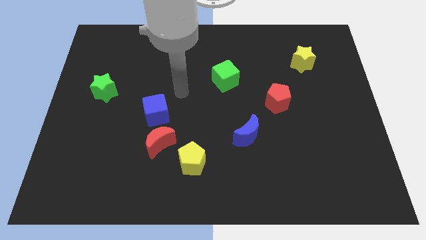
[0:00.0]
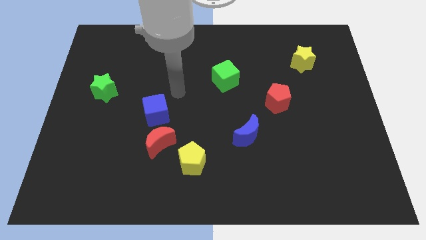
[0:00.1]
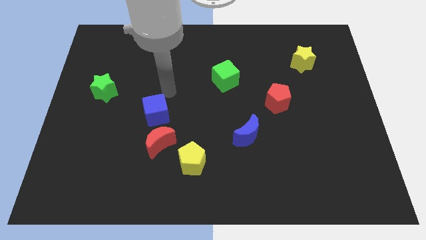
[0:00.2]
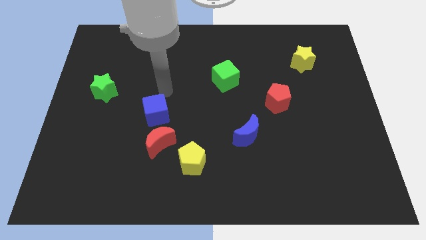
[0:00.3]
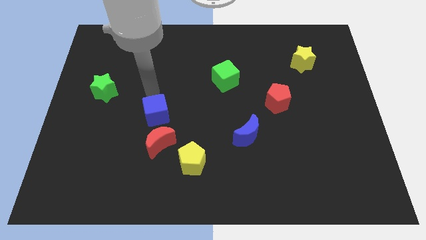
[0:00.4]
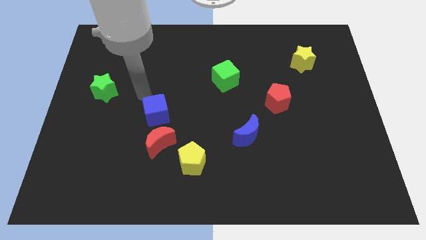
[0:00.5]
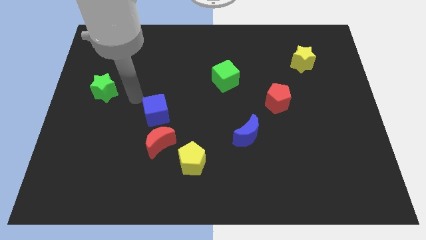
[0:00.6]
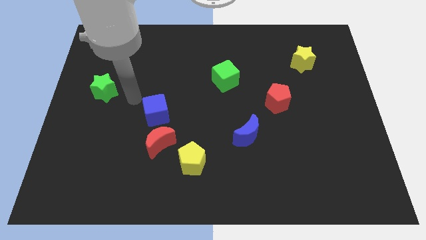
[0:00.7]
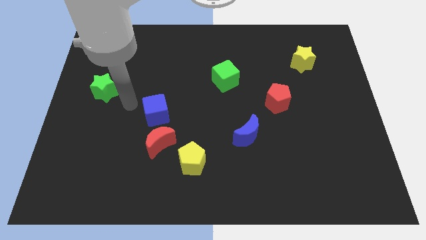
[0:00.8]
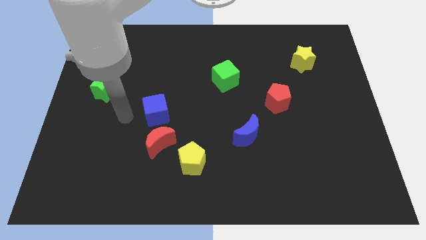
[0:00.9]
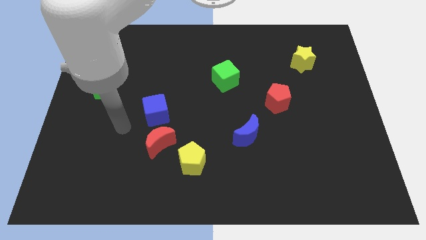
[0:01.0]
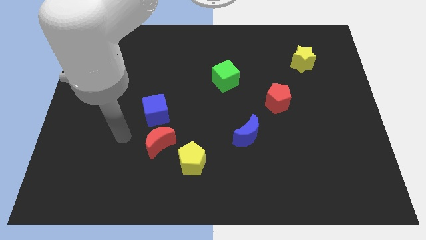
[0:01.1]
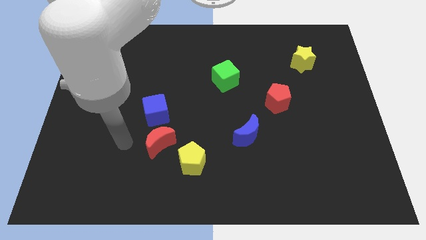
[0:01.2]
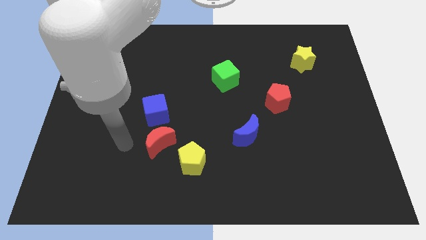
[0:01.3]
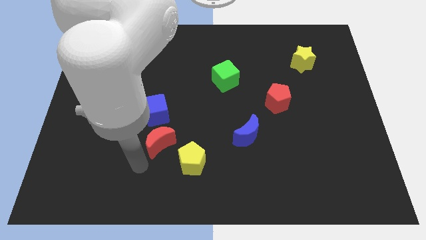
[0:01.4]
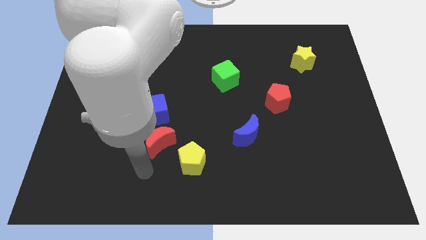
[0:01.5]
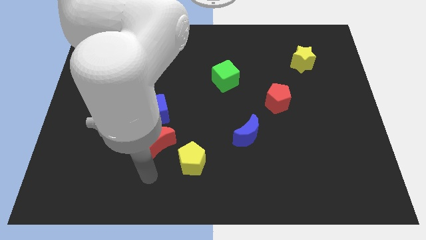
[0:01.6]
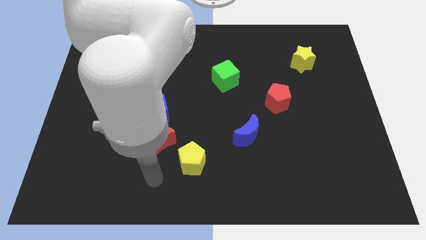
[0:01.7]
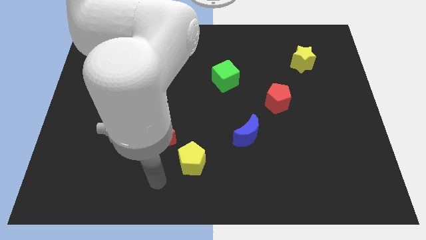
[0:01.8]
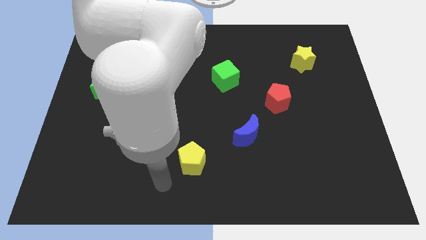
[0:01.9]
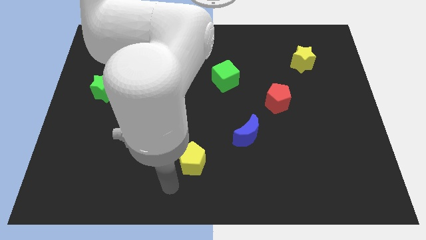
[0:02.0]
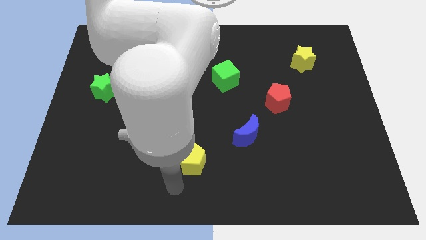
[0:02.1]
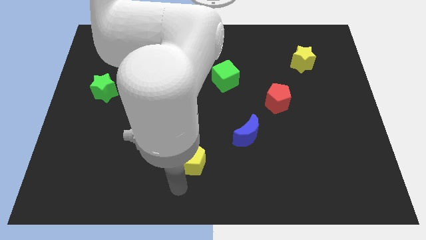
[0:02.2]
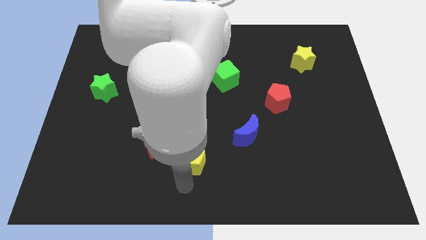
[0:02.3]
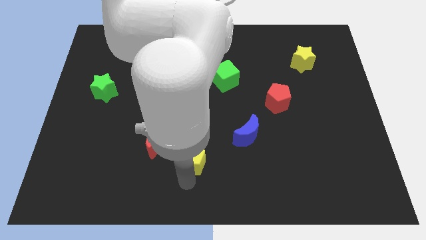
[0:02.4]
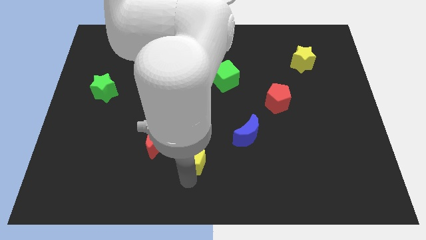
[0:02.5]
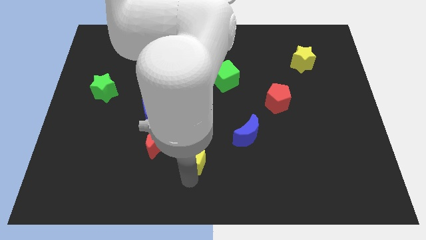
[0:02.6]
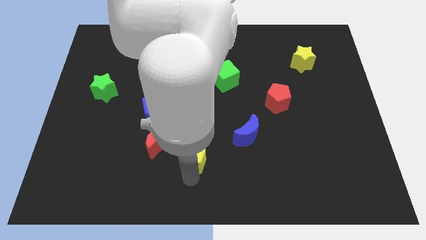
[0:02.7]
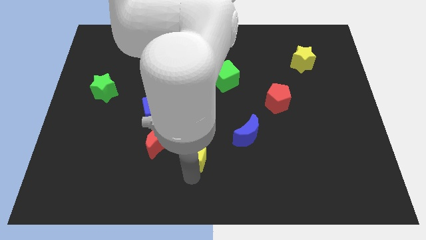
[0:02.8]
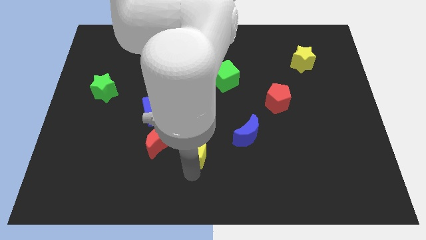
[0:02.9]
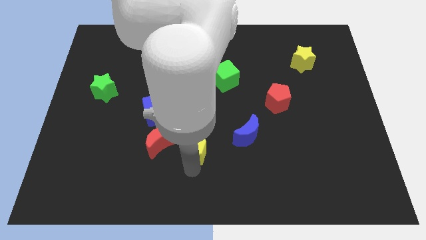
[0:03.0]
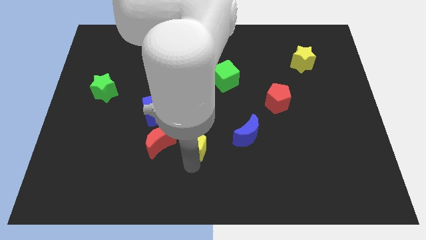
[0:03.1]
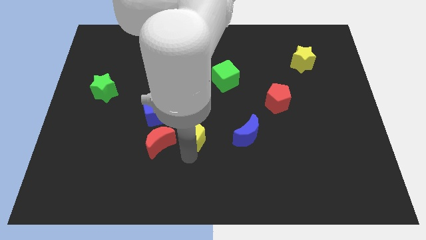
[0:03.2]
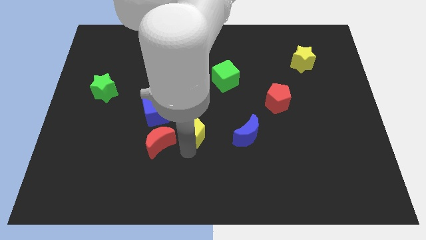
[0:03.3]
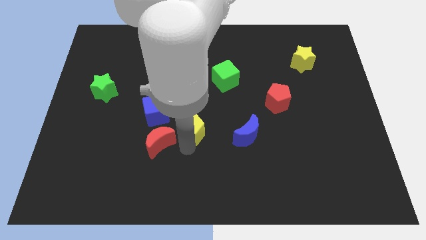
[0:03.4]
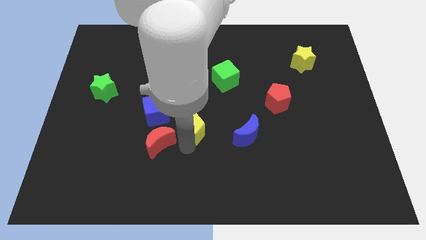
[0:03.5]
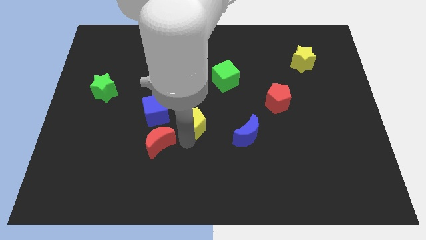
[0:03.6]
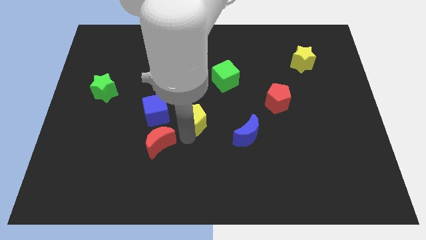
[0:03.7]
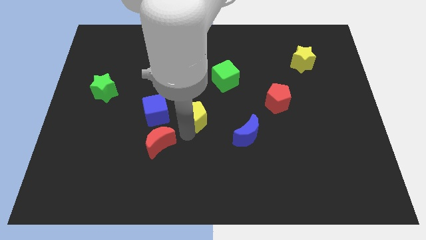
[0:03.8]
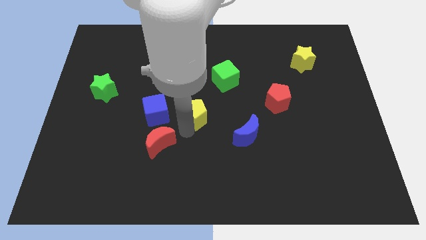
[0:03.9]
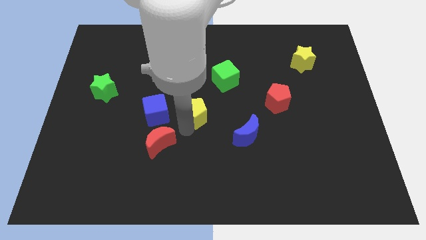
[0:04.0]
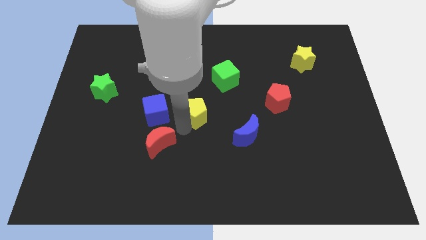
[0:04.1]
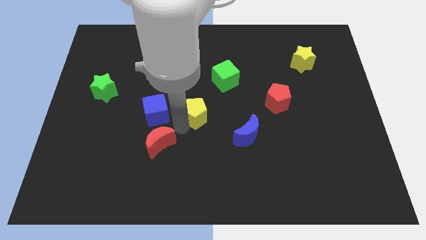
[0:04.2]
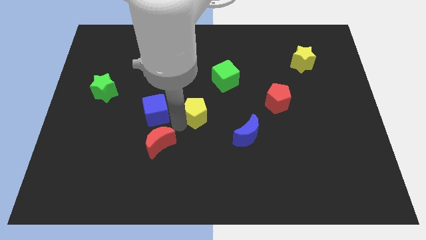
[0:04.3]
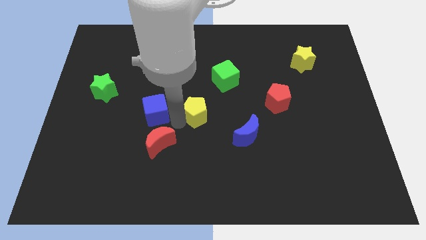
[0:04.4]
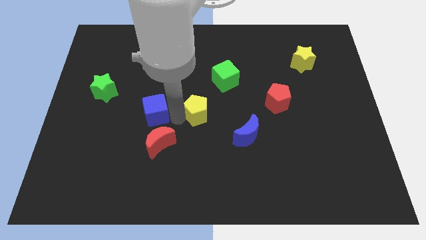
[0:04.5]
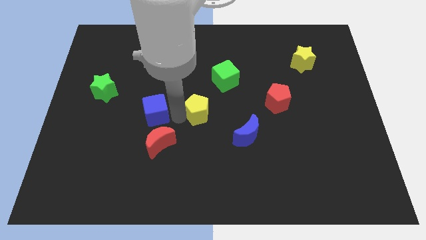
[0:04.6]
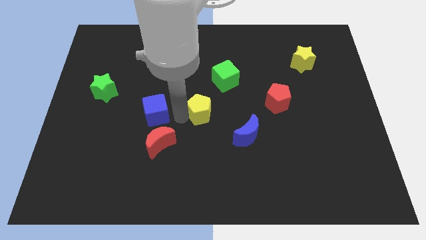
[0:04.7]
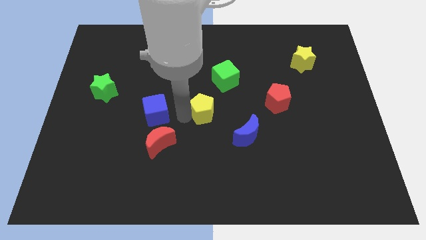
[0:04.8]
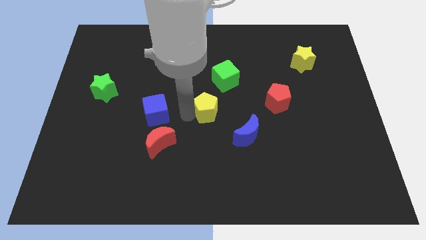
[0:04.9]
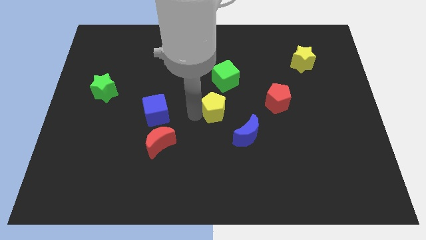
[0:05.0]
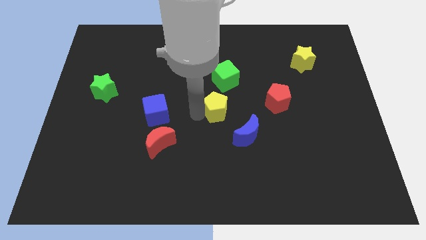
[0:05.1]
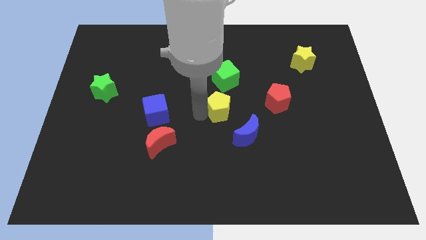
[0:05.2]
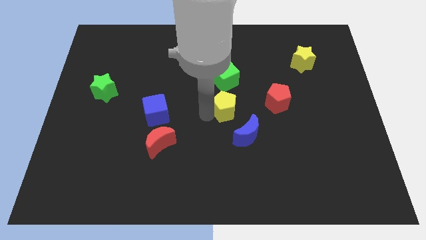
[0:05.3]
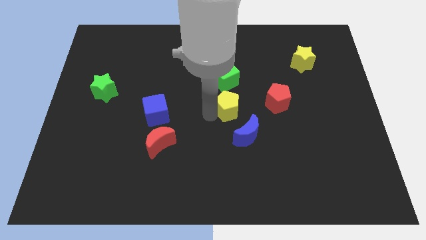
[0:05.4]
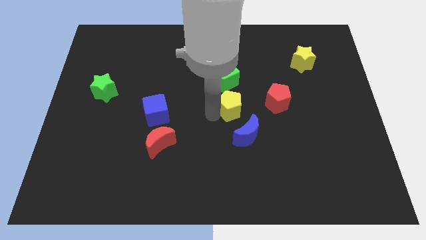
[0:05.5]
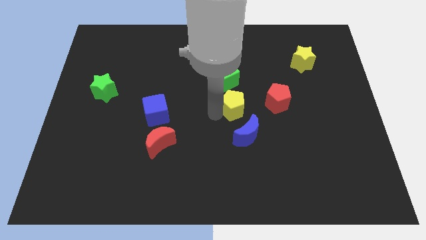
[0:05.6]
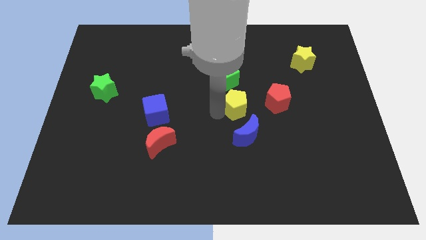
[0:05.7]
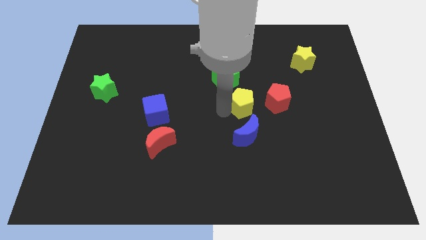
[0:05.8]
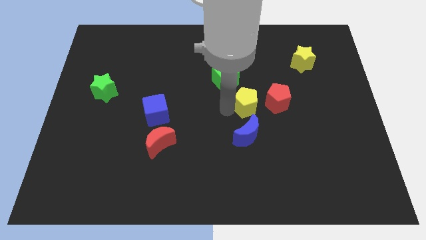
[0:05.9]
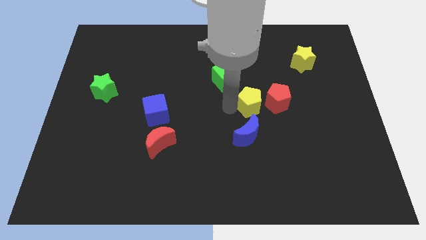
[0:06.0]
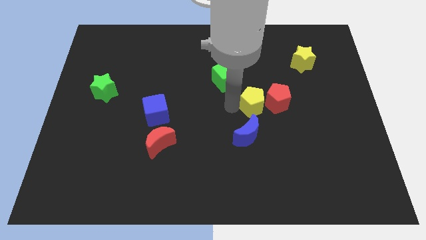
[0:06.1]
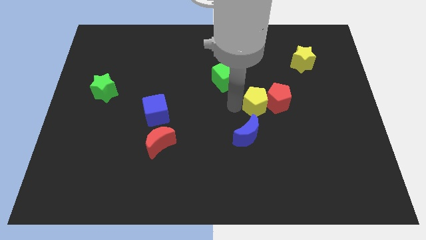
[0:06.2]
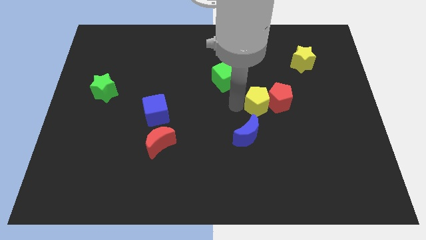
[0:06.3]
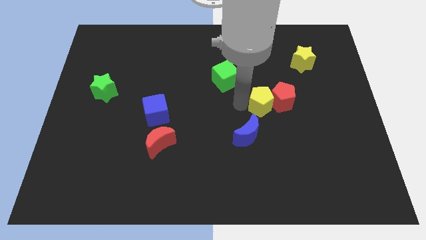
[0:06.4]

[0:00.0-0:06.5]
push the yellow pentagon to the red pentagon

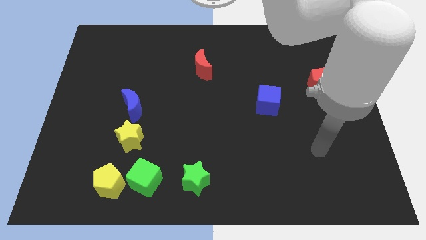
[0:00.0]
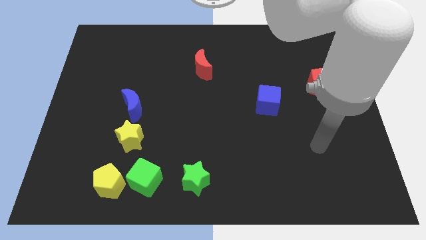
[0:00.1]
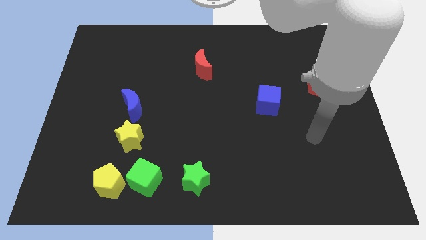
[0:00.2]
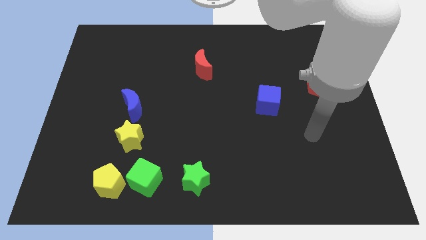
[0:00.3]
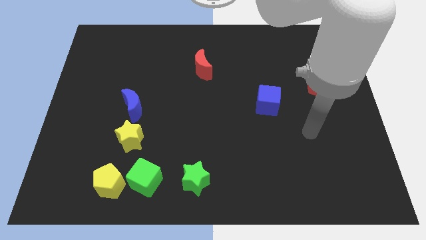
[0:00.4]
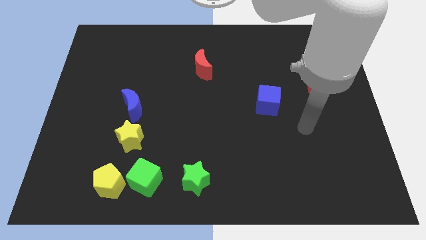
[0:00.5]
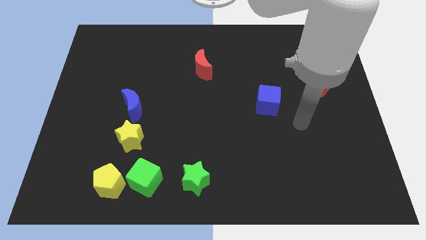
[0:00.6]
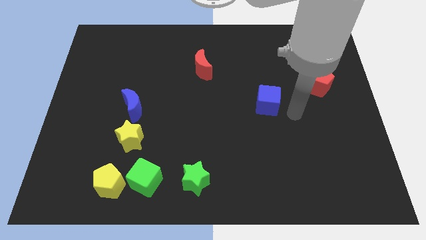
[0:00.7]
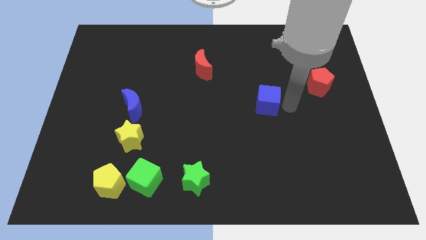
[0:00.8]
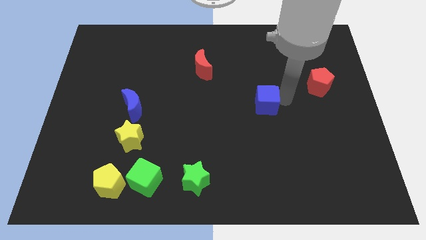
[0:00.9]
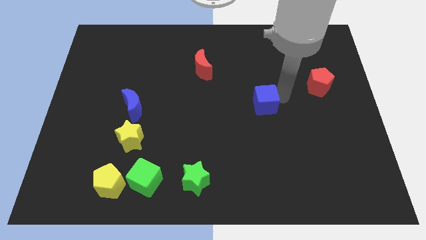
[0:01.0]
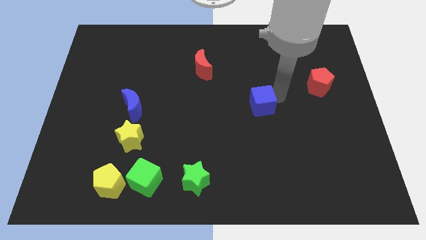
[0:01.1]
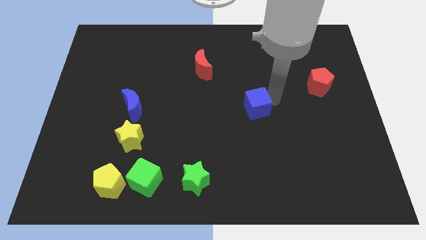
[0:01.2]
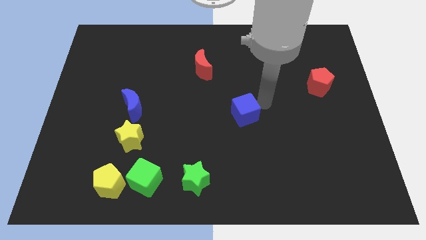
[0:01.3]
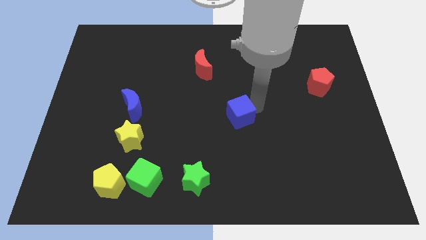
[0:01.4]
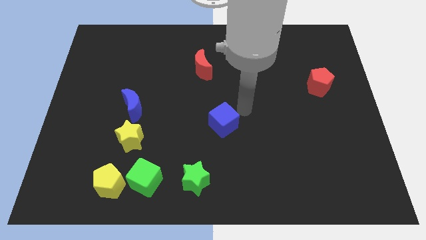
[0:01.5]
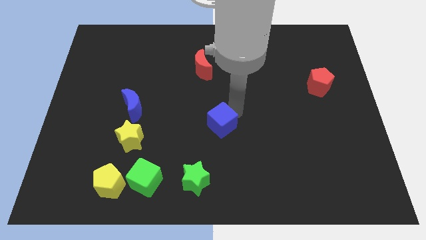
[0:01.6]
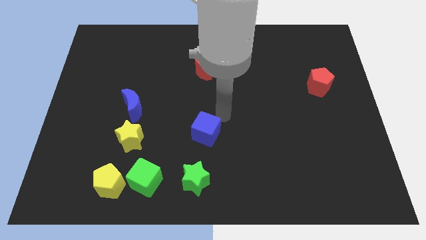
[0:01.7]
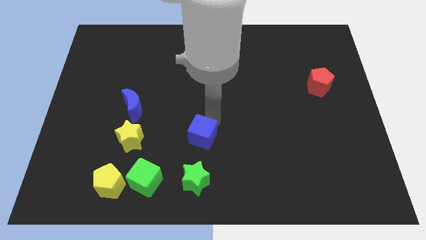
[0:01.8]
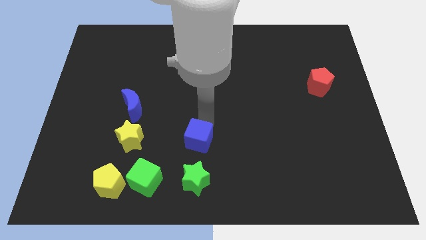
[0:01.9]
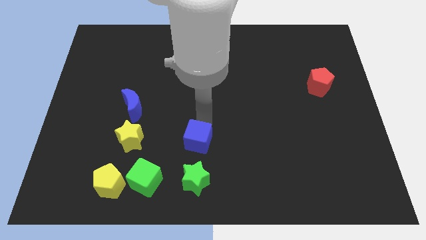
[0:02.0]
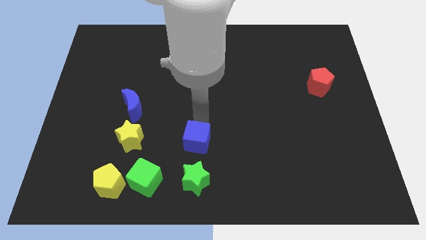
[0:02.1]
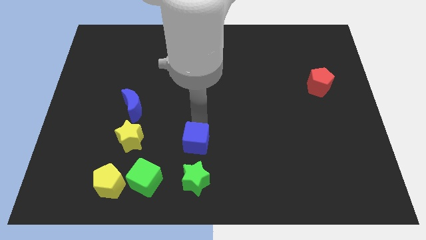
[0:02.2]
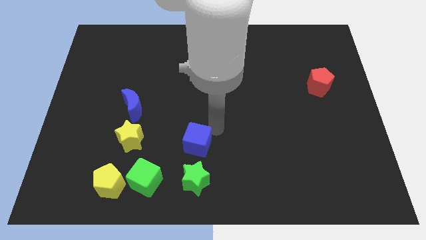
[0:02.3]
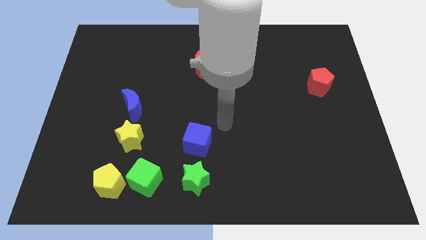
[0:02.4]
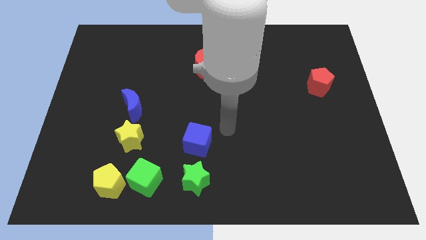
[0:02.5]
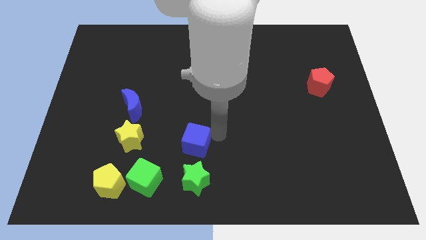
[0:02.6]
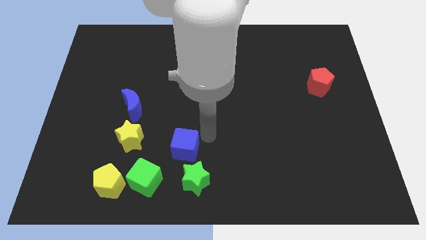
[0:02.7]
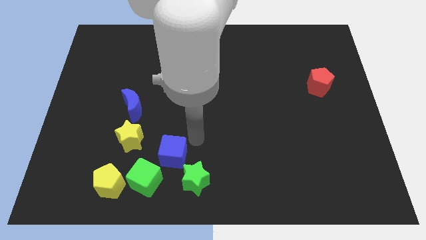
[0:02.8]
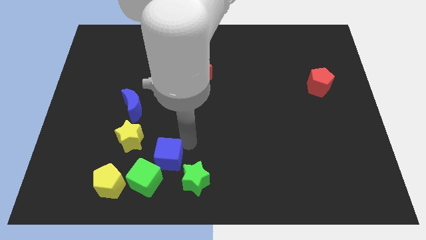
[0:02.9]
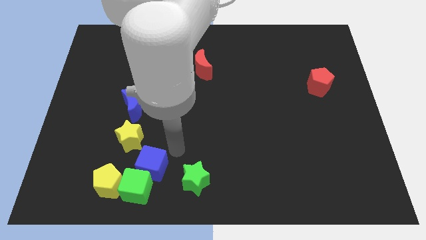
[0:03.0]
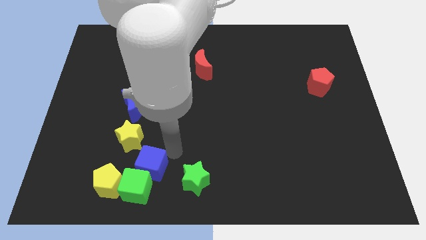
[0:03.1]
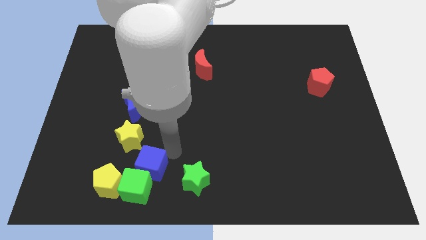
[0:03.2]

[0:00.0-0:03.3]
push the blue cube close to the green cube
